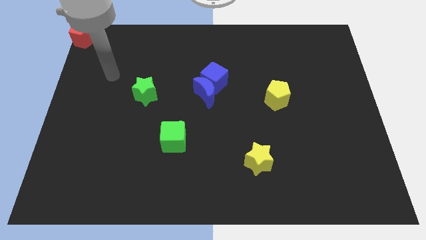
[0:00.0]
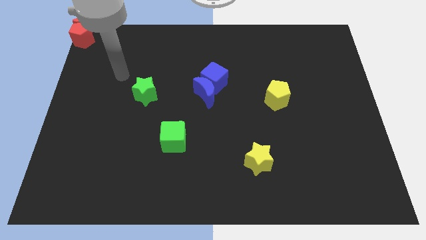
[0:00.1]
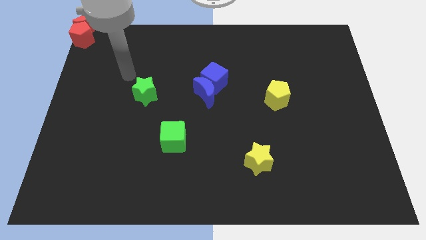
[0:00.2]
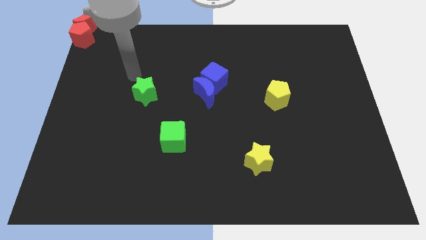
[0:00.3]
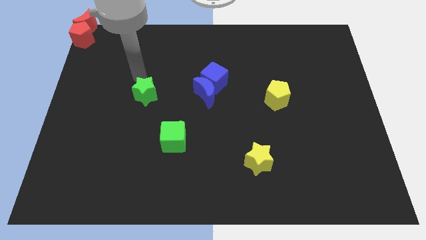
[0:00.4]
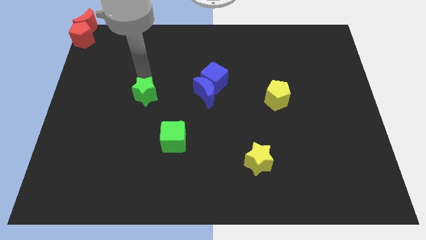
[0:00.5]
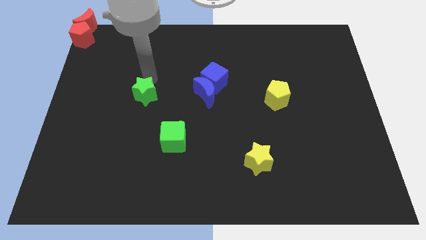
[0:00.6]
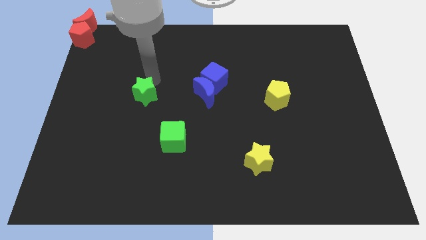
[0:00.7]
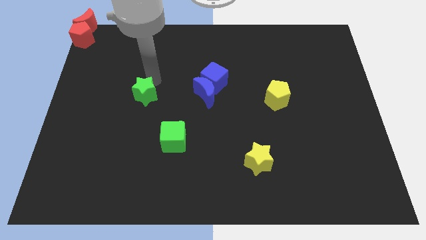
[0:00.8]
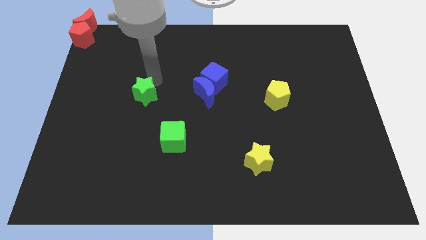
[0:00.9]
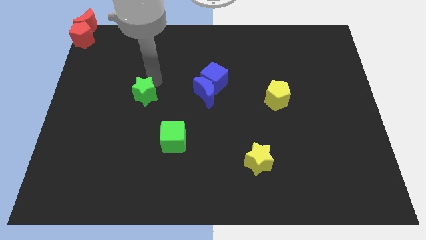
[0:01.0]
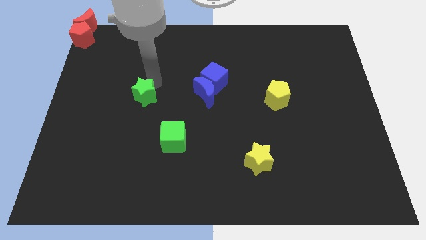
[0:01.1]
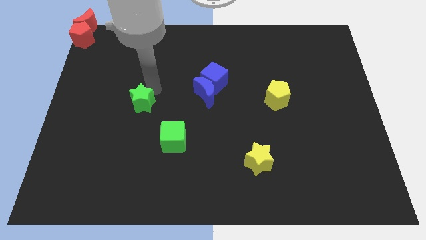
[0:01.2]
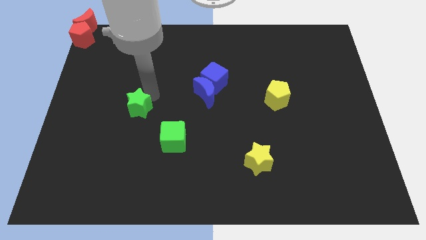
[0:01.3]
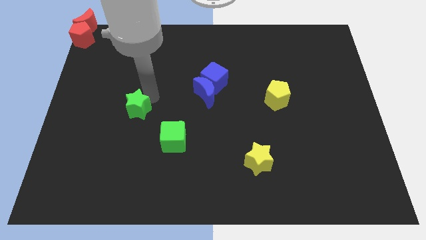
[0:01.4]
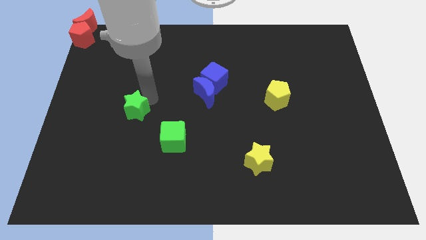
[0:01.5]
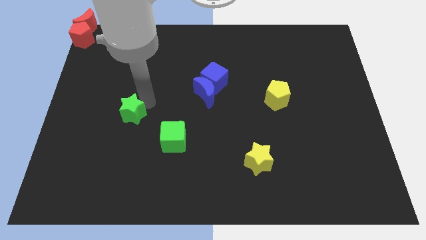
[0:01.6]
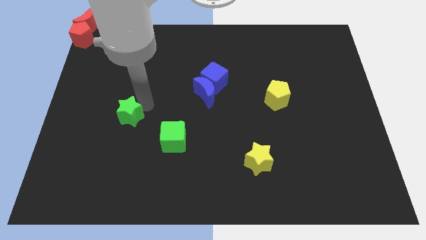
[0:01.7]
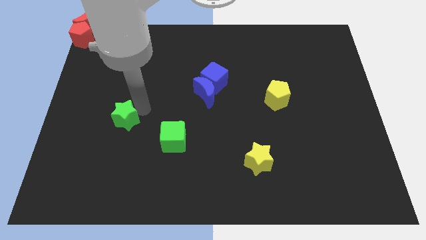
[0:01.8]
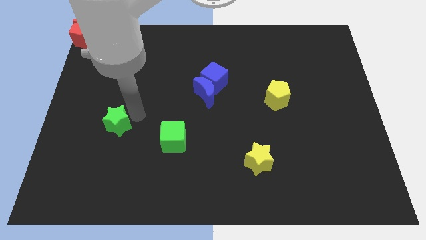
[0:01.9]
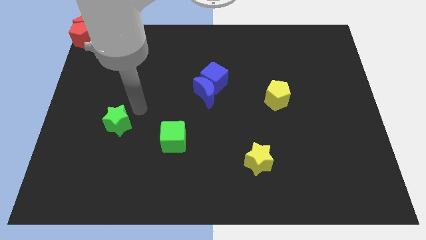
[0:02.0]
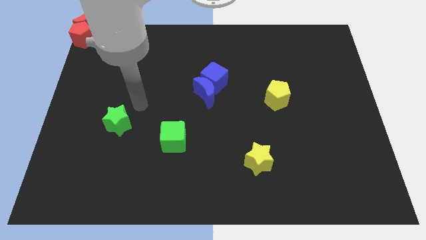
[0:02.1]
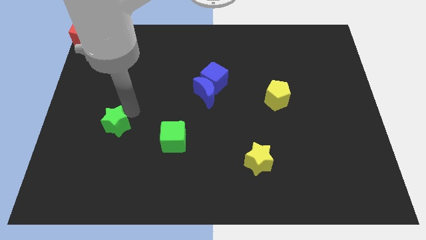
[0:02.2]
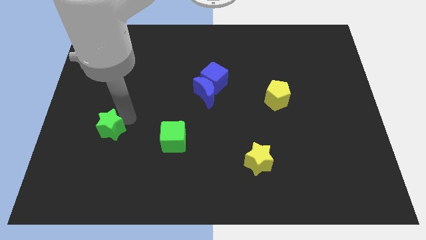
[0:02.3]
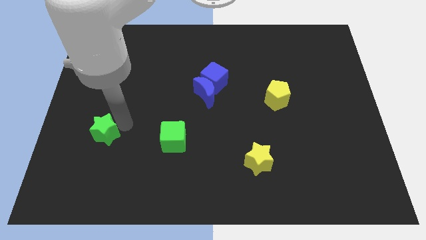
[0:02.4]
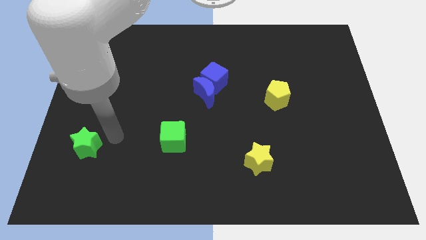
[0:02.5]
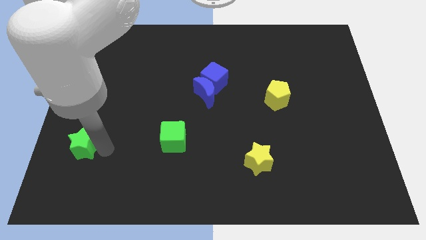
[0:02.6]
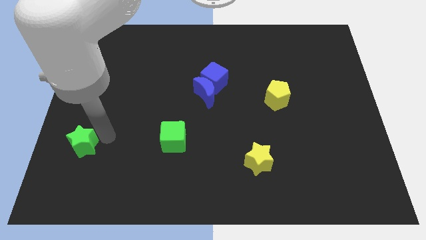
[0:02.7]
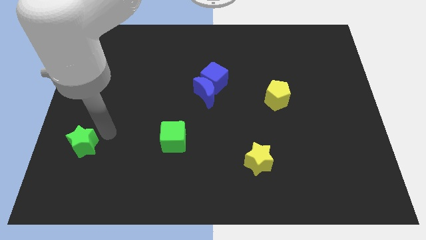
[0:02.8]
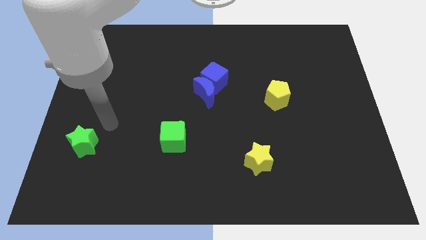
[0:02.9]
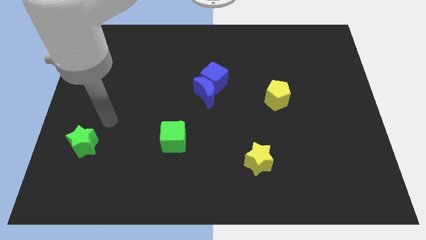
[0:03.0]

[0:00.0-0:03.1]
move the green star horizontally to the left side of the green cube

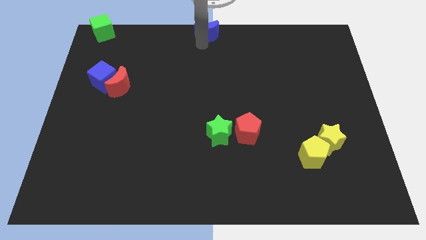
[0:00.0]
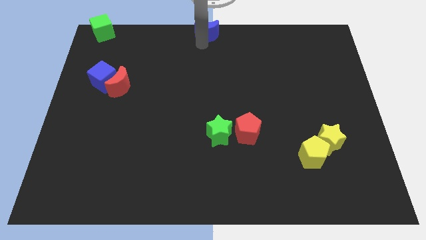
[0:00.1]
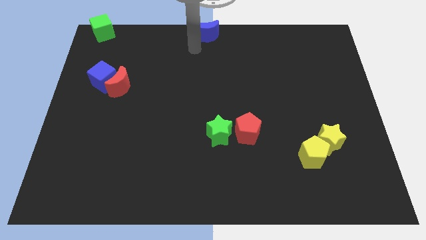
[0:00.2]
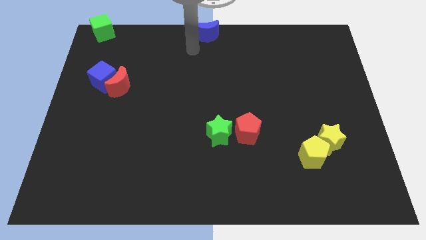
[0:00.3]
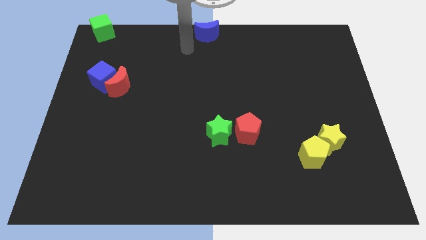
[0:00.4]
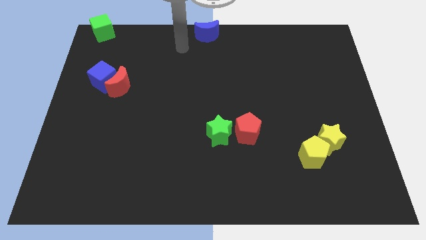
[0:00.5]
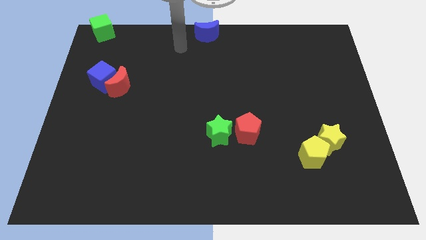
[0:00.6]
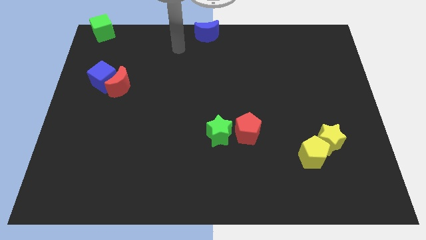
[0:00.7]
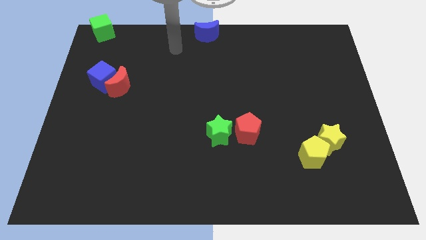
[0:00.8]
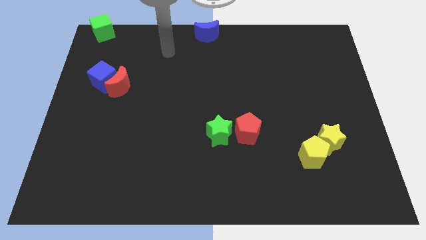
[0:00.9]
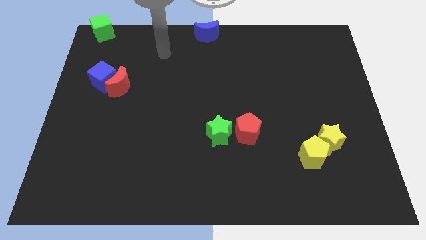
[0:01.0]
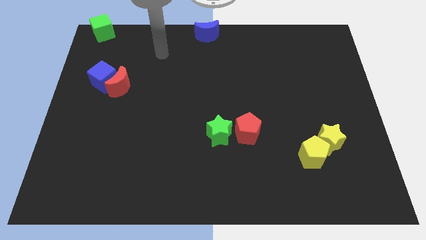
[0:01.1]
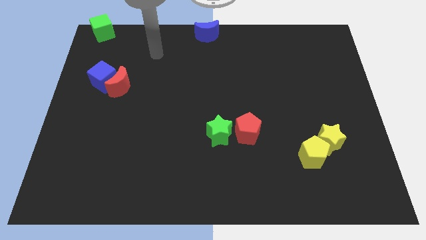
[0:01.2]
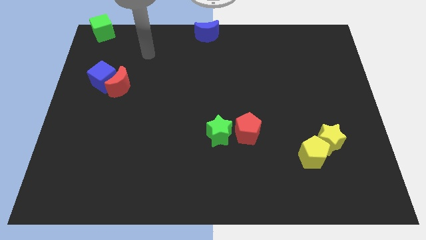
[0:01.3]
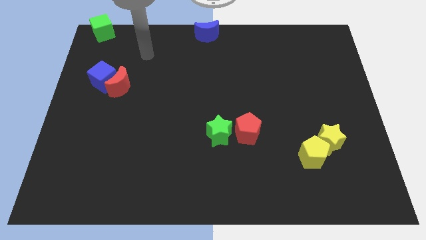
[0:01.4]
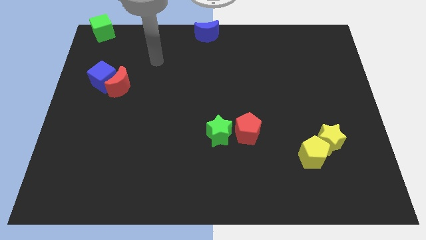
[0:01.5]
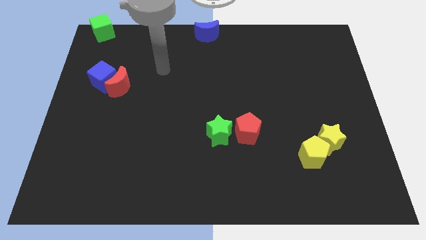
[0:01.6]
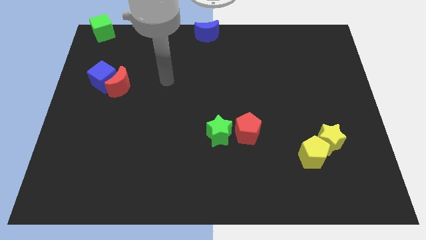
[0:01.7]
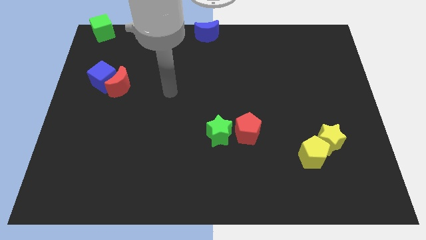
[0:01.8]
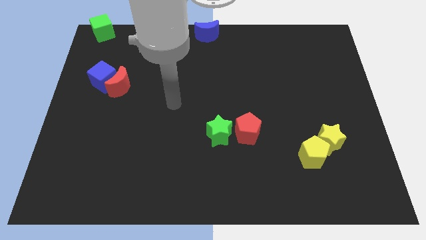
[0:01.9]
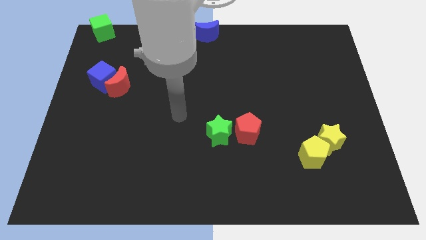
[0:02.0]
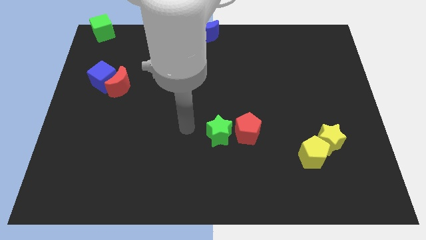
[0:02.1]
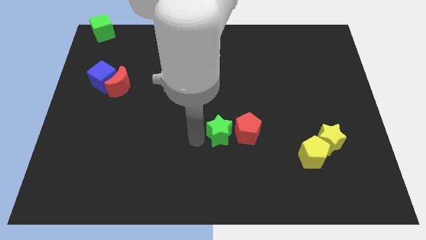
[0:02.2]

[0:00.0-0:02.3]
move your arm away from the blue moon

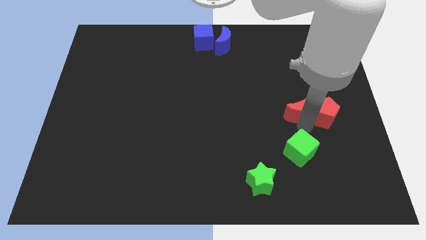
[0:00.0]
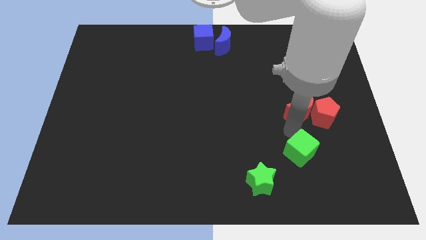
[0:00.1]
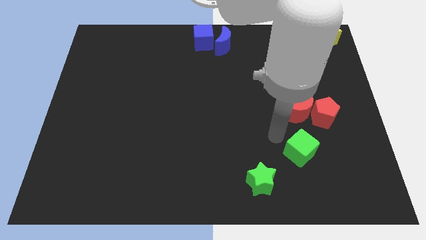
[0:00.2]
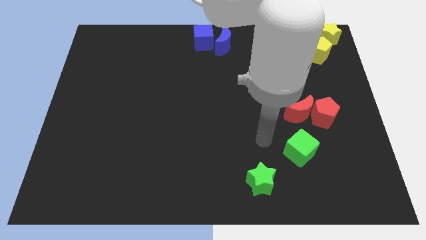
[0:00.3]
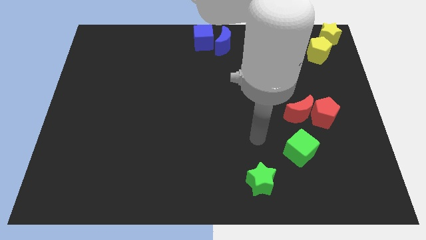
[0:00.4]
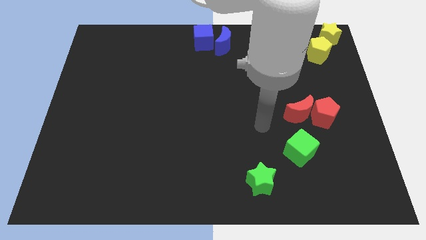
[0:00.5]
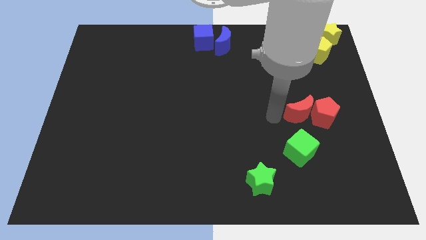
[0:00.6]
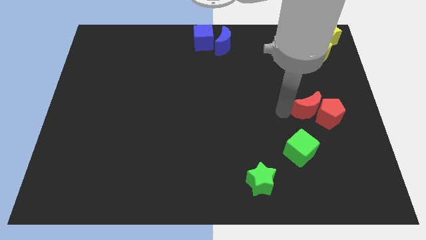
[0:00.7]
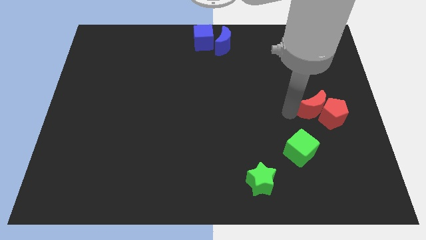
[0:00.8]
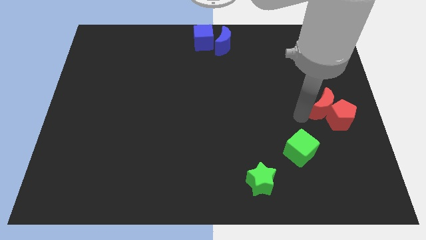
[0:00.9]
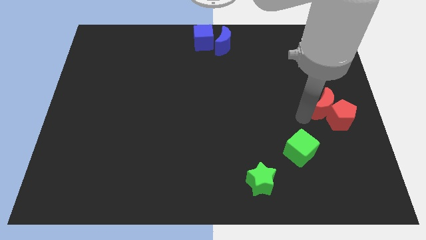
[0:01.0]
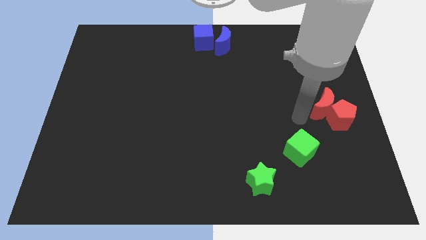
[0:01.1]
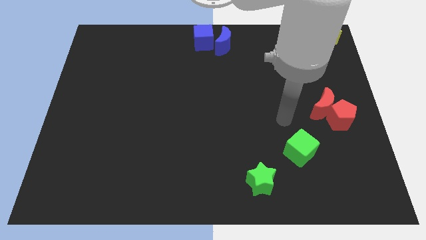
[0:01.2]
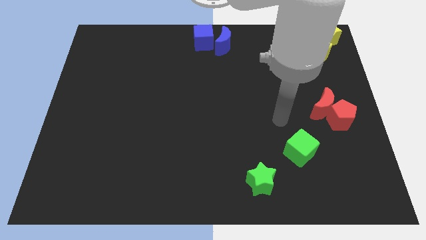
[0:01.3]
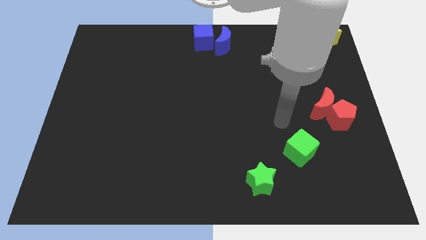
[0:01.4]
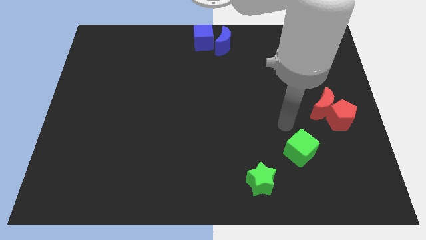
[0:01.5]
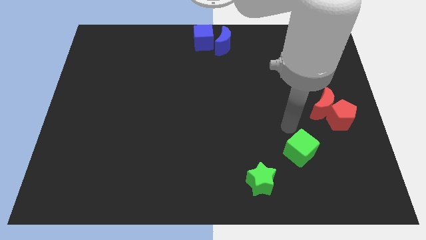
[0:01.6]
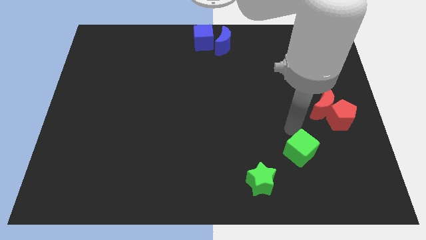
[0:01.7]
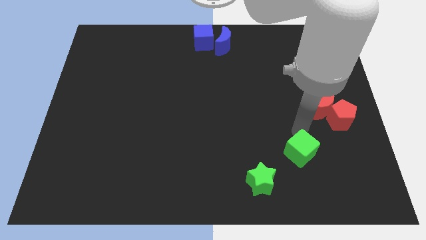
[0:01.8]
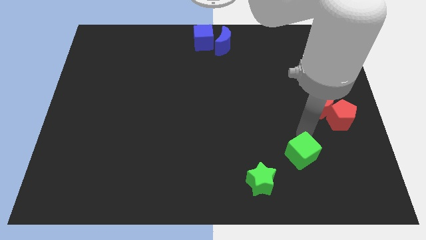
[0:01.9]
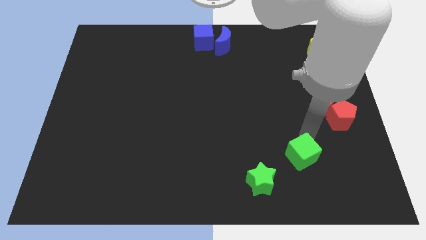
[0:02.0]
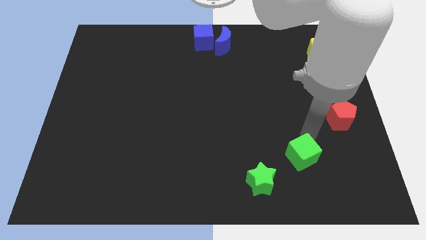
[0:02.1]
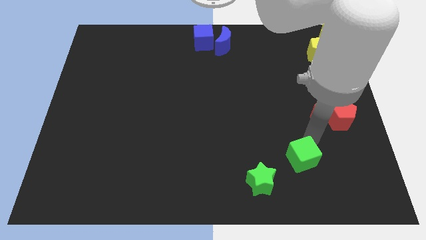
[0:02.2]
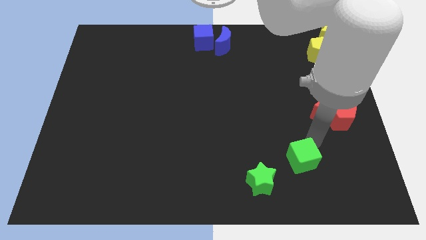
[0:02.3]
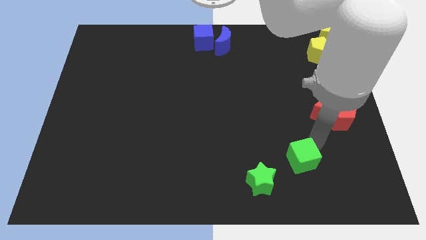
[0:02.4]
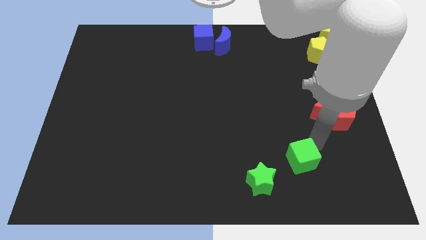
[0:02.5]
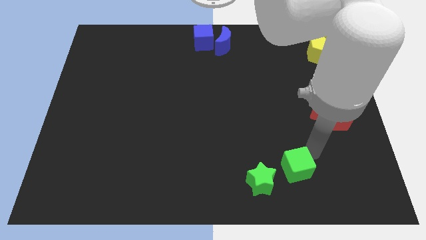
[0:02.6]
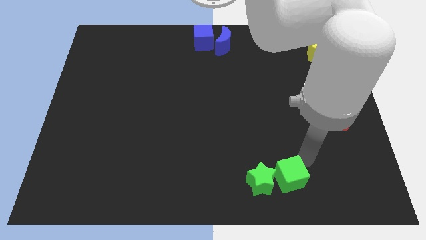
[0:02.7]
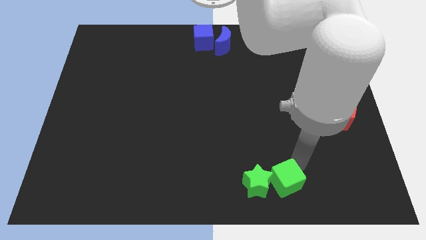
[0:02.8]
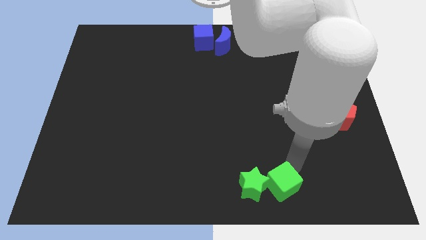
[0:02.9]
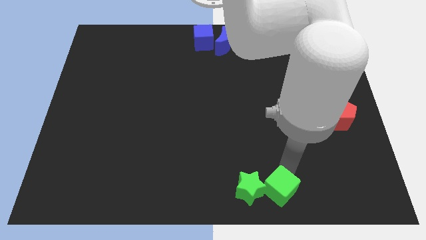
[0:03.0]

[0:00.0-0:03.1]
move the green cube into the green star

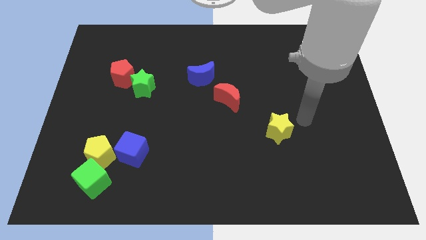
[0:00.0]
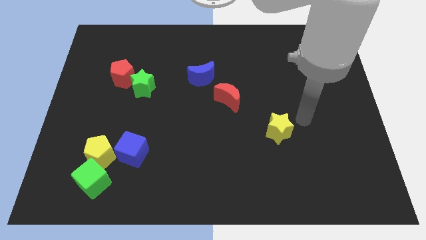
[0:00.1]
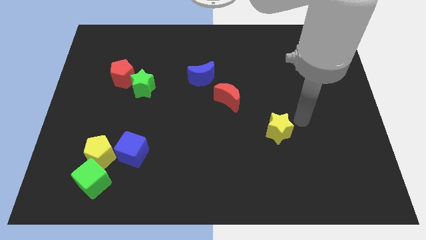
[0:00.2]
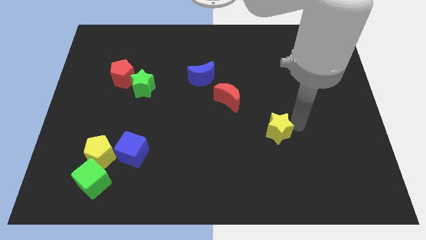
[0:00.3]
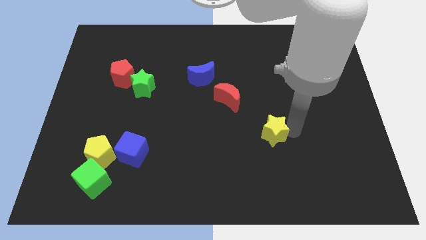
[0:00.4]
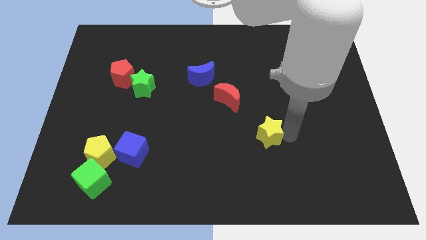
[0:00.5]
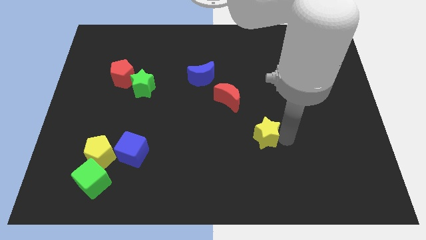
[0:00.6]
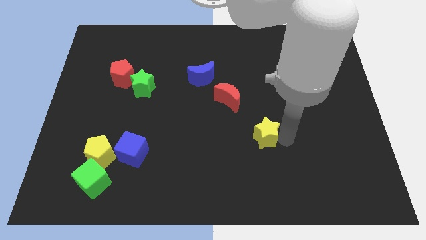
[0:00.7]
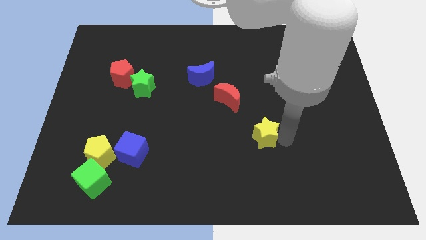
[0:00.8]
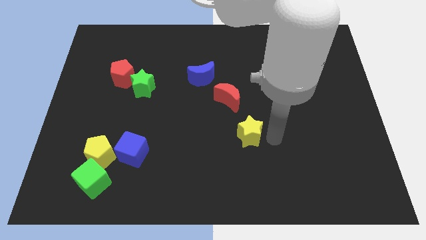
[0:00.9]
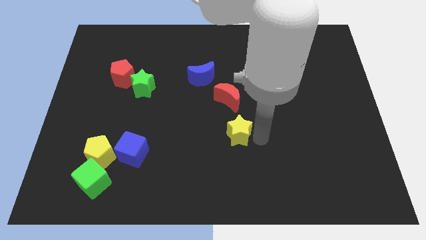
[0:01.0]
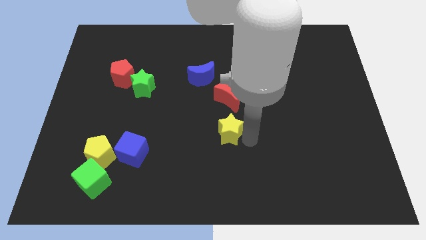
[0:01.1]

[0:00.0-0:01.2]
put the yellow star vertically below the red moon
